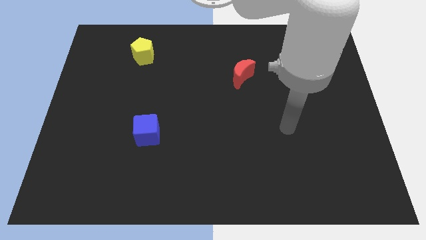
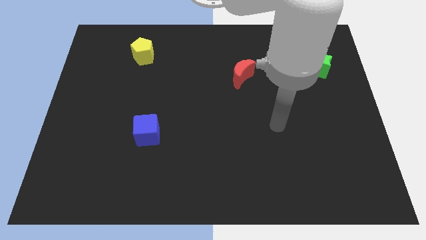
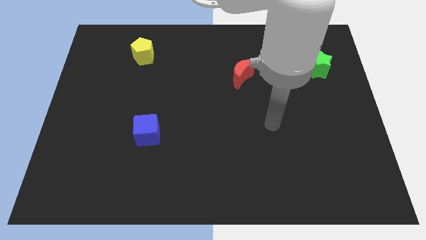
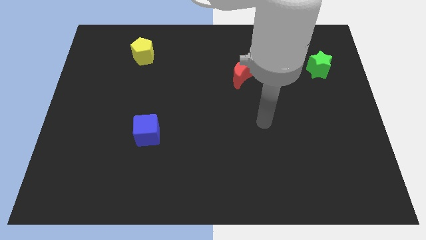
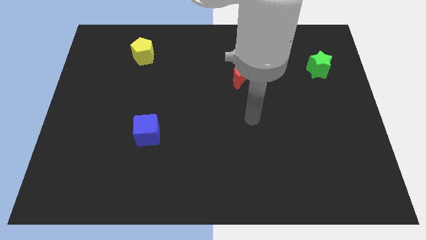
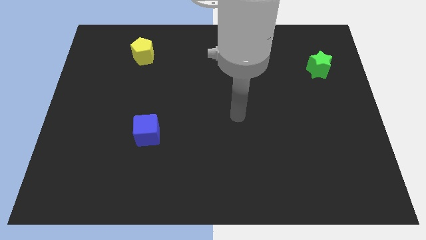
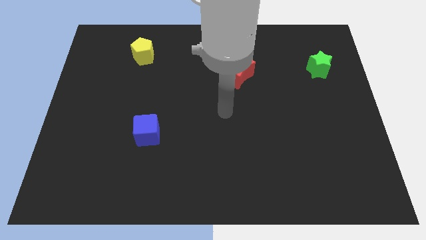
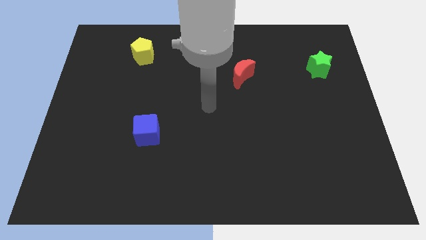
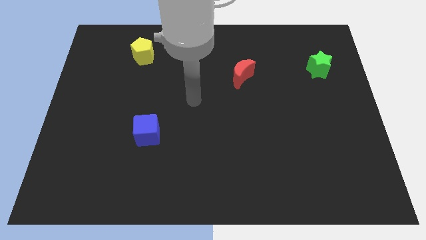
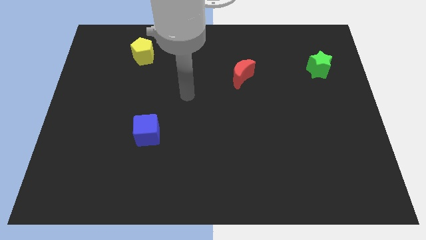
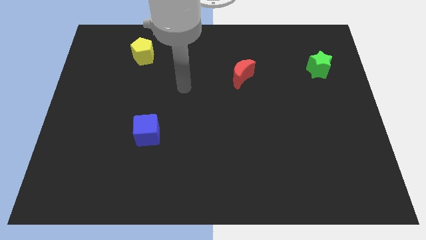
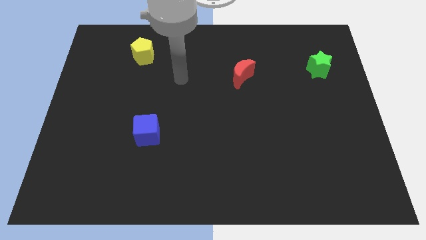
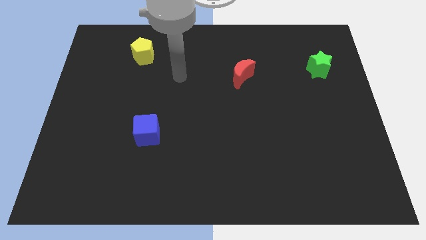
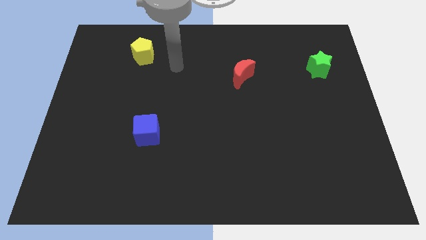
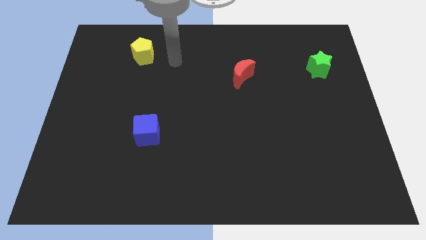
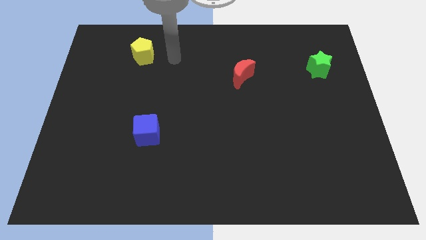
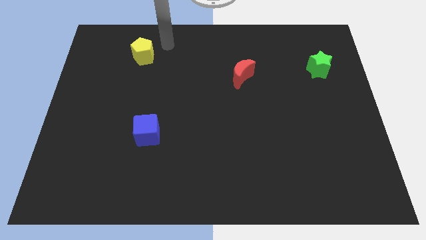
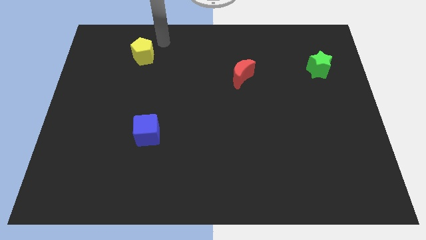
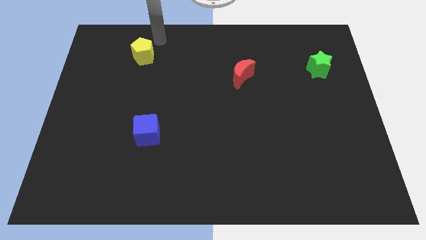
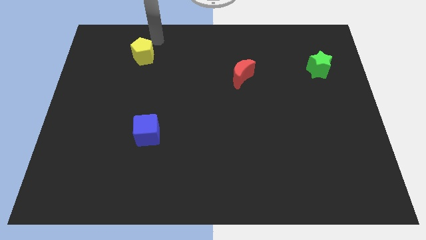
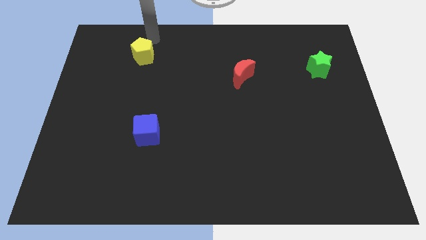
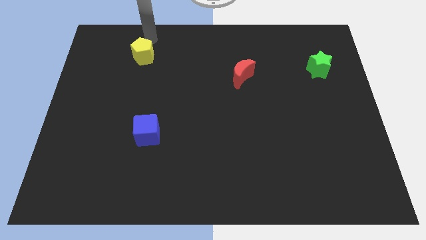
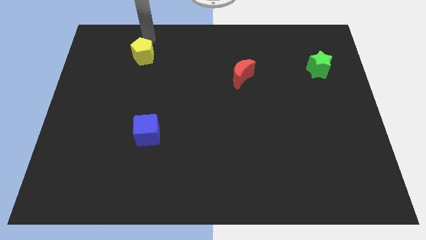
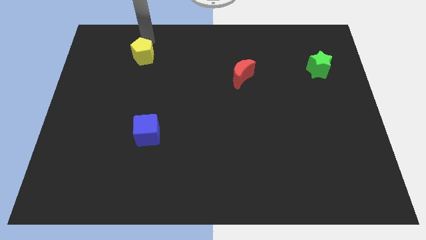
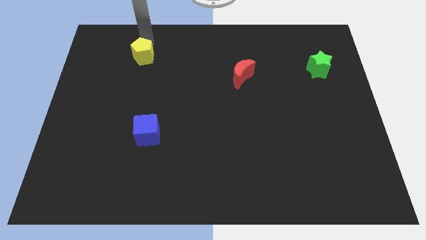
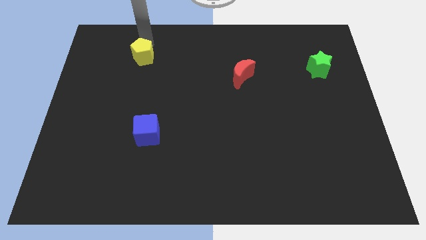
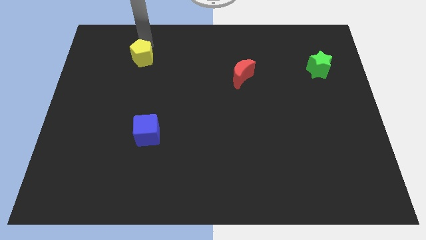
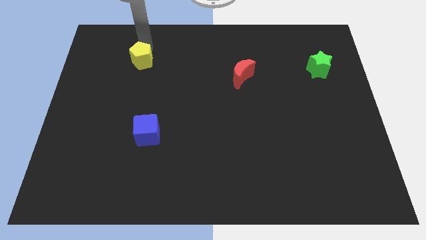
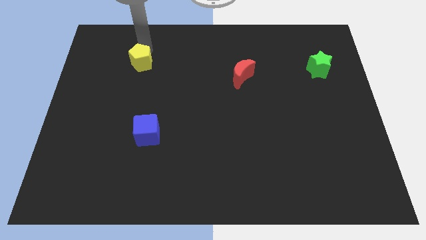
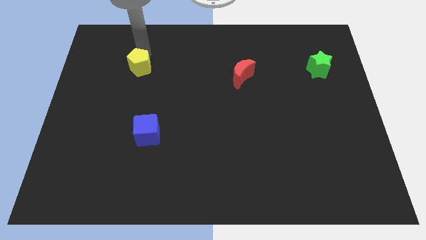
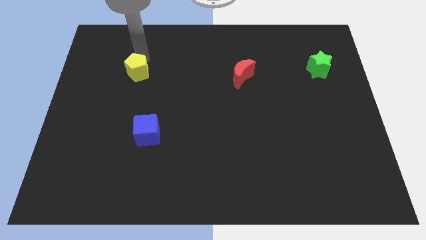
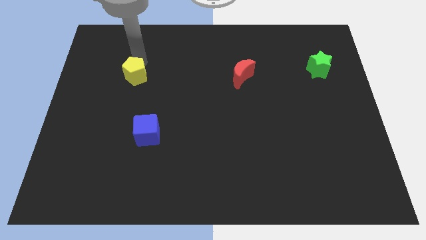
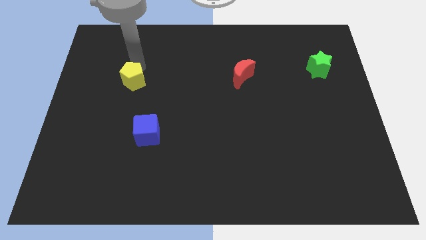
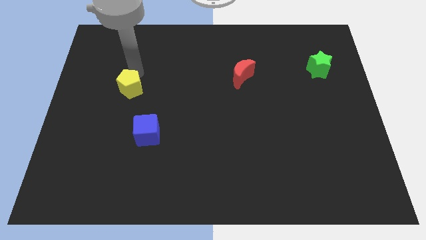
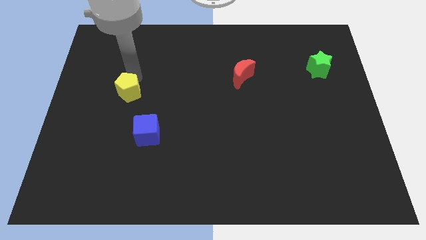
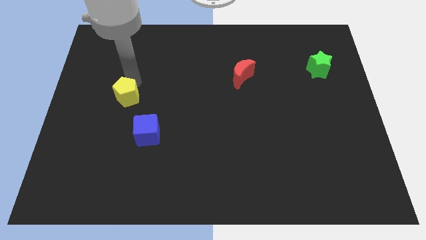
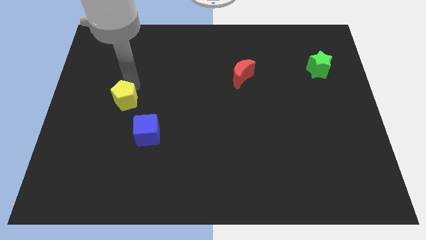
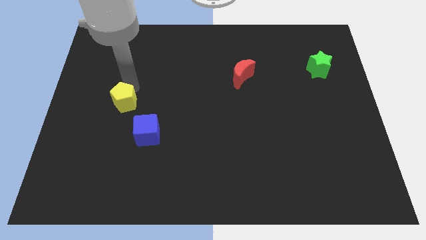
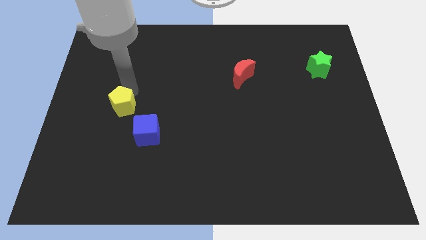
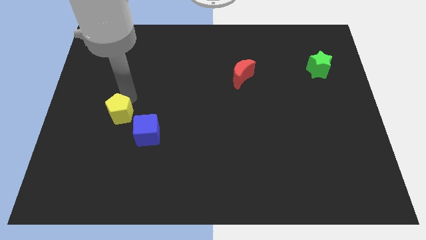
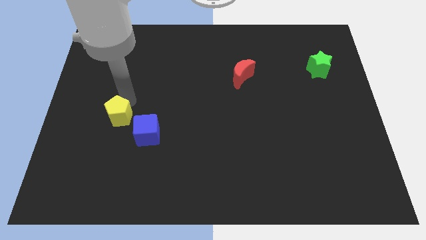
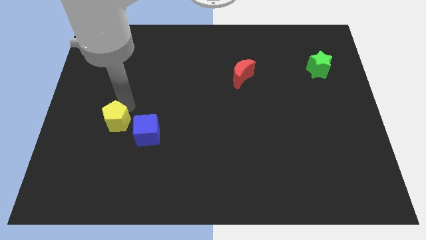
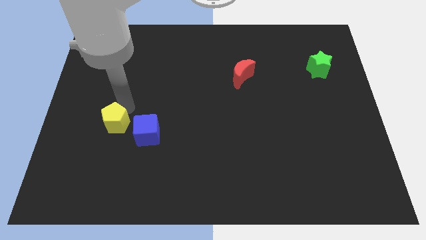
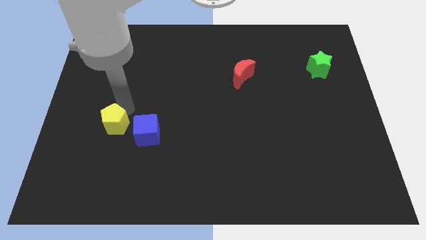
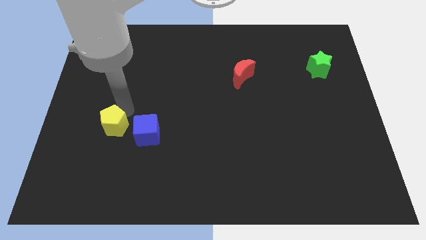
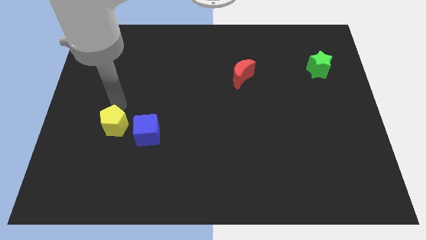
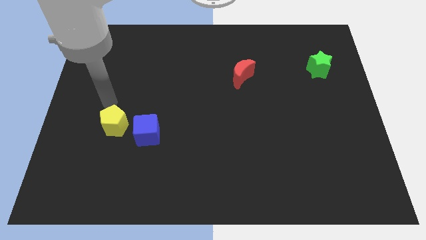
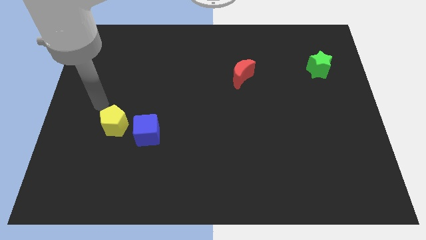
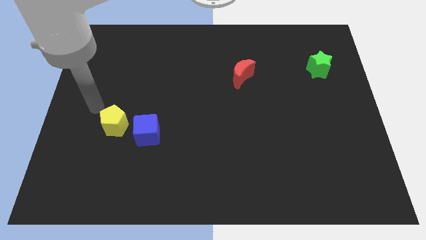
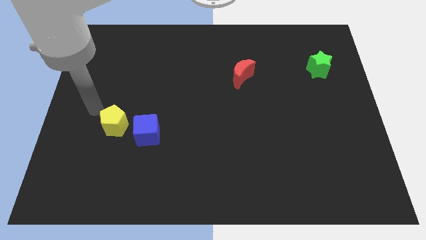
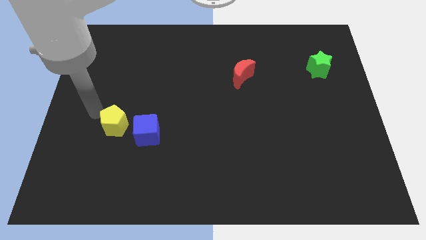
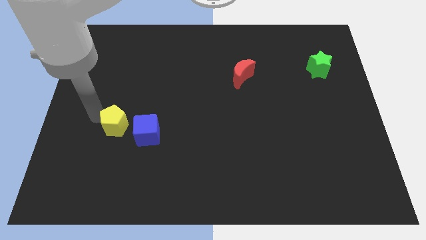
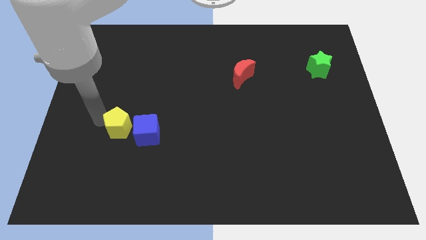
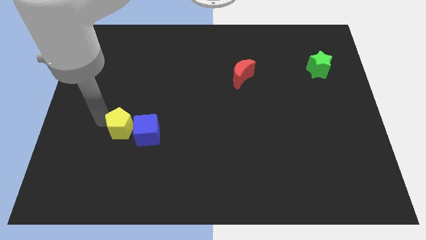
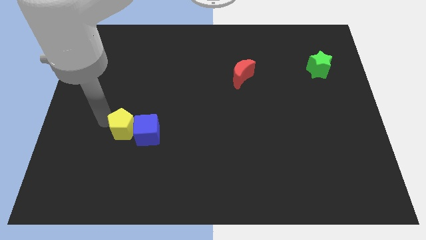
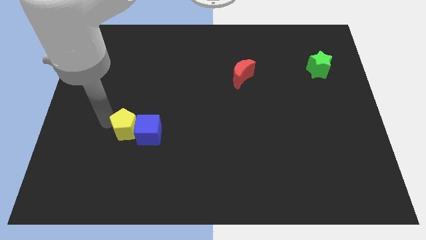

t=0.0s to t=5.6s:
move the yellow block towards the blue block

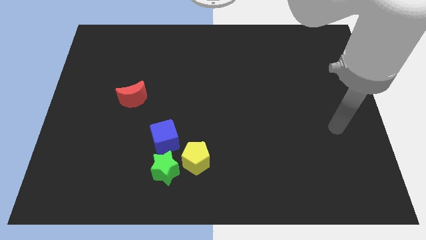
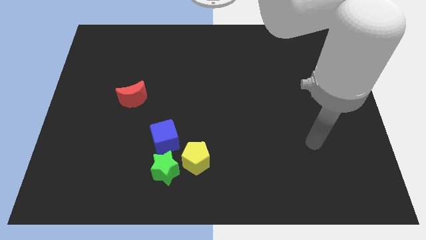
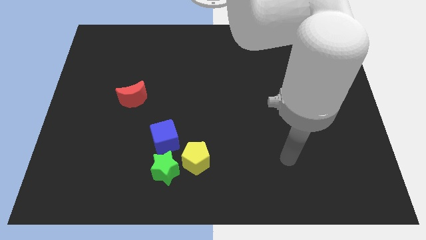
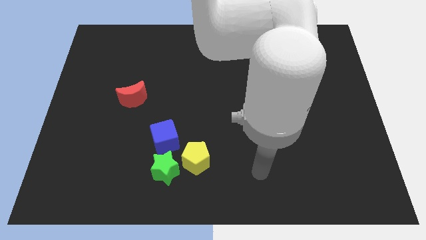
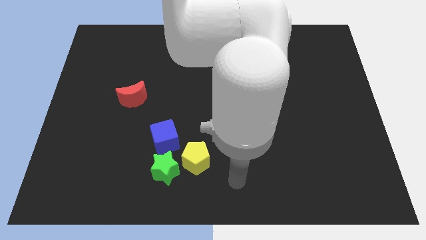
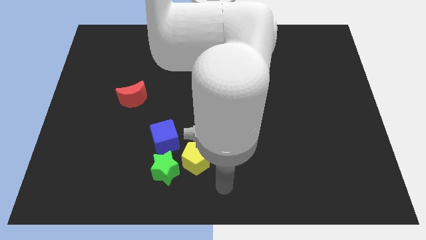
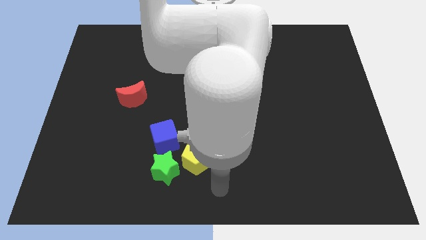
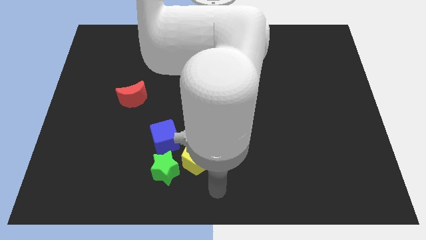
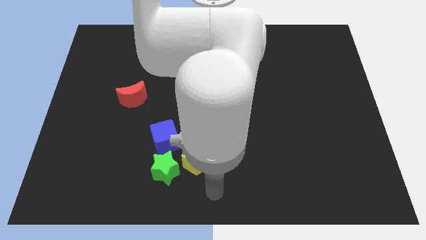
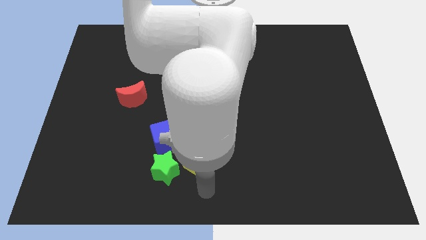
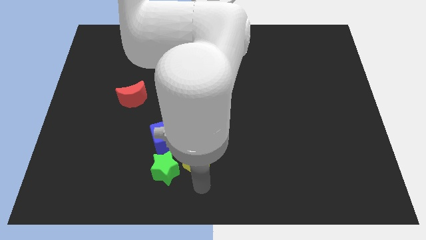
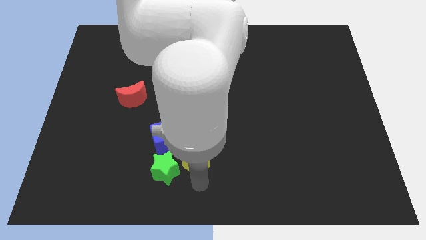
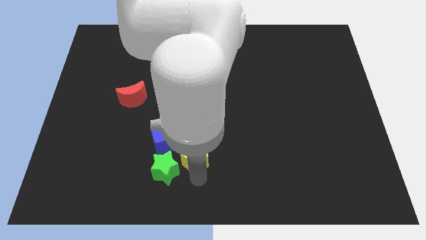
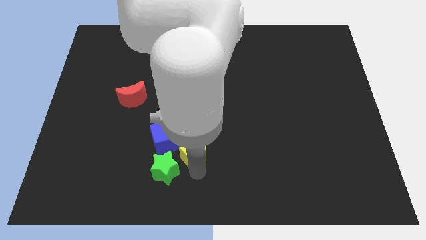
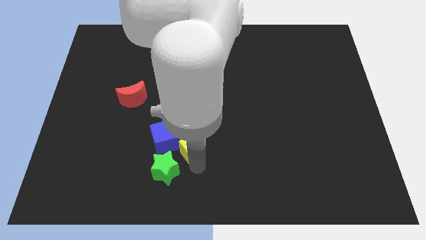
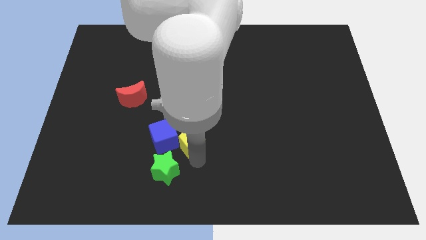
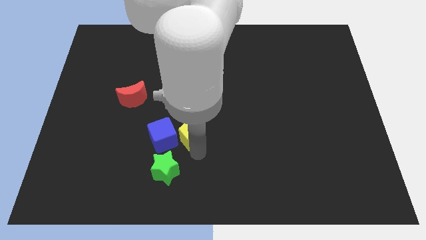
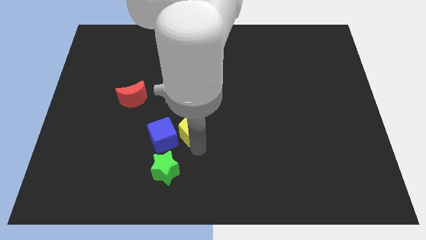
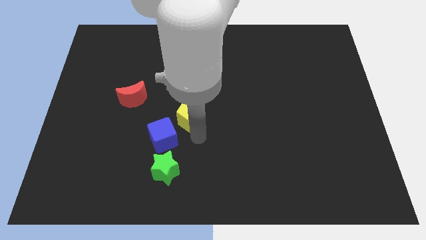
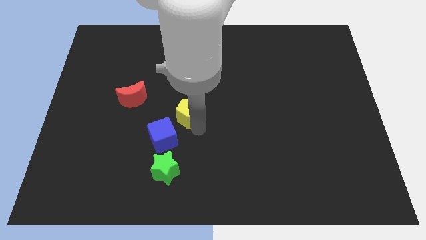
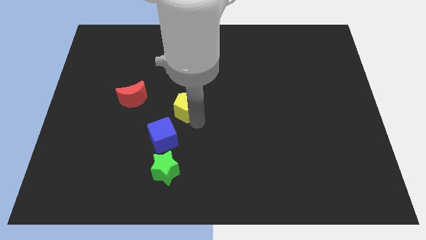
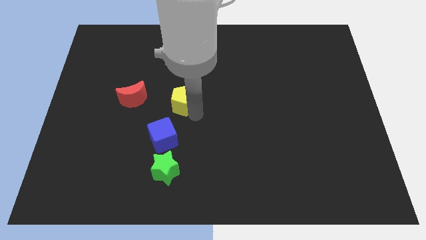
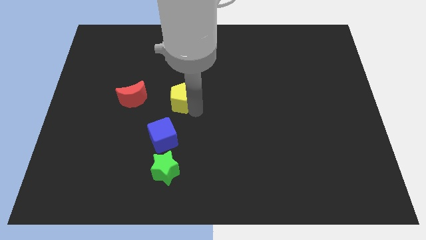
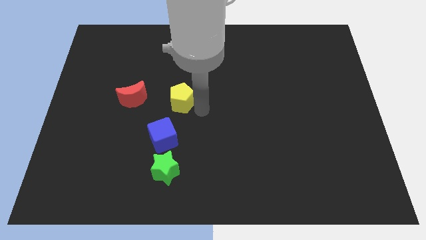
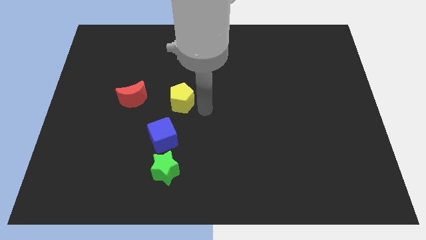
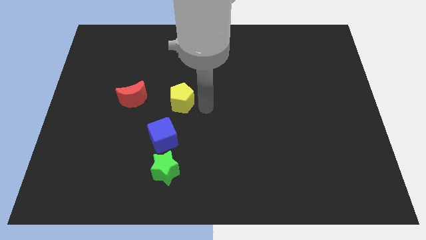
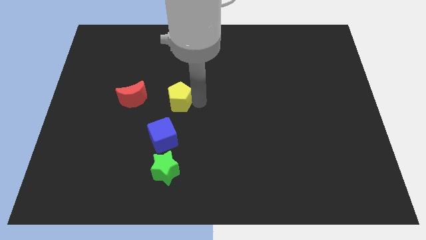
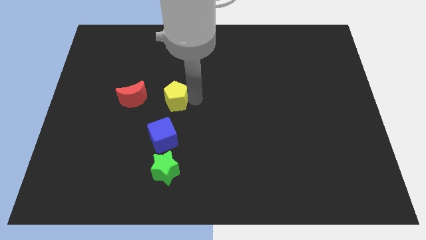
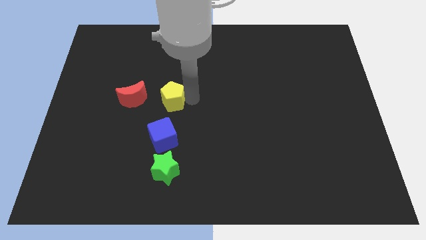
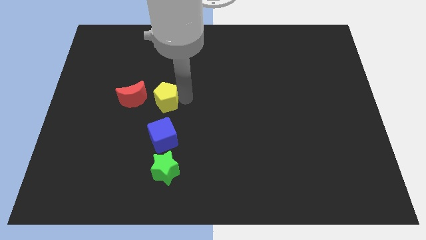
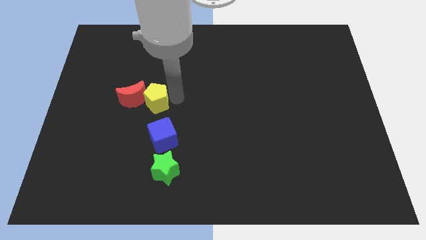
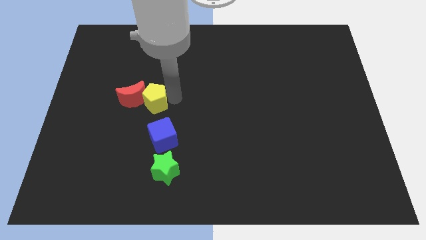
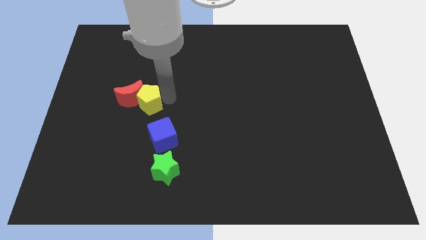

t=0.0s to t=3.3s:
move the yellow block towards the red block

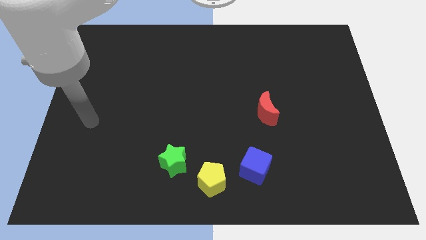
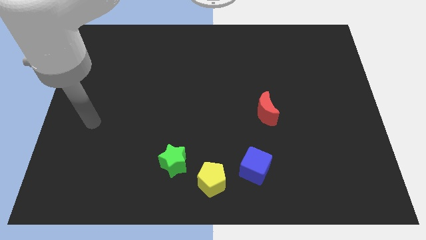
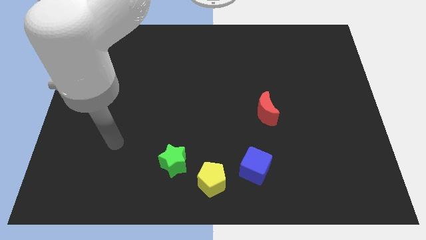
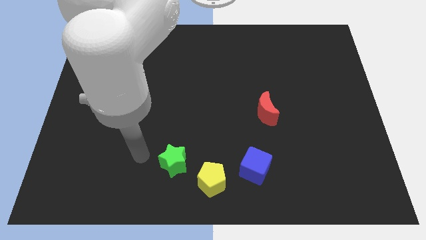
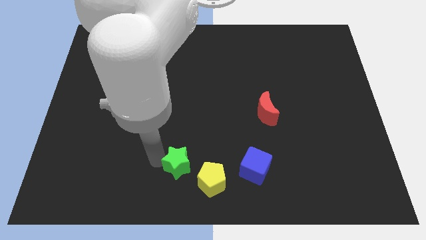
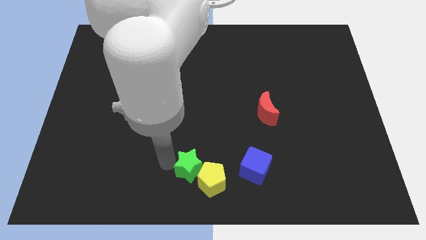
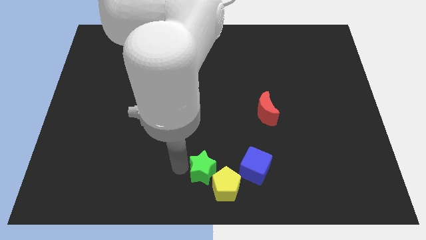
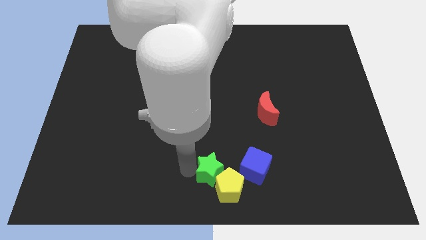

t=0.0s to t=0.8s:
put the star next to the yellow block
